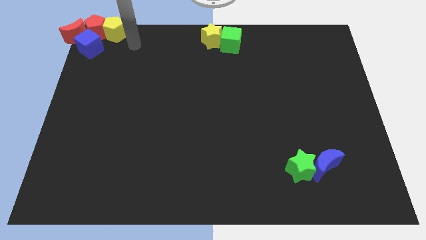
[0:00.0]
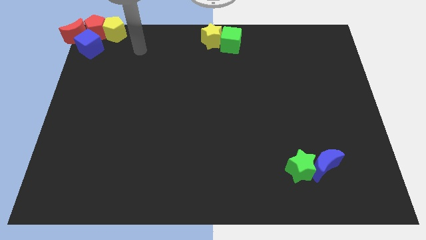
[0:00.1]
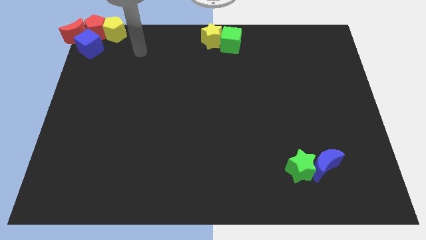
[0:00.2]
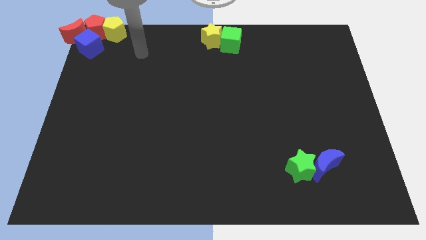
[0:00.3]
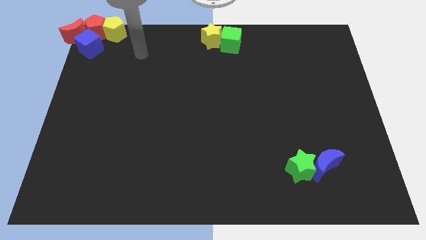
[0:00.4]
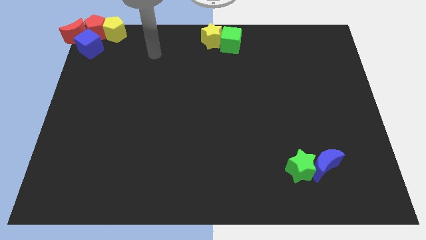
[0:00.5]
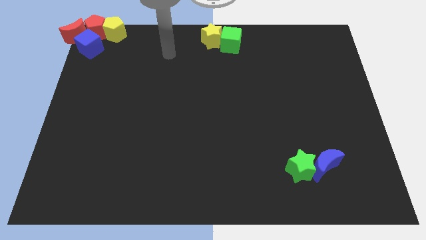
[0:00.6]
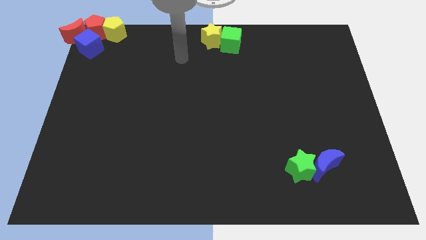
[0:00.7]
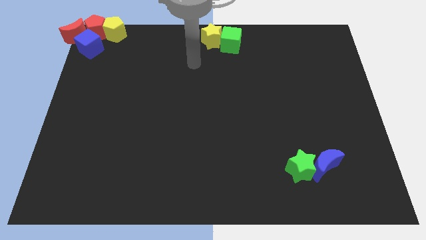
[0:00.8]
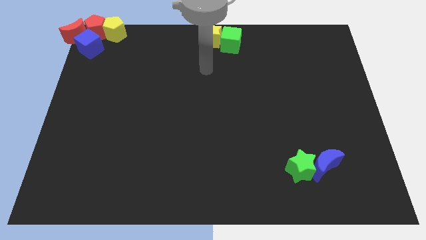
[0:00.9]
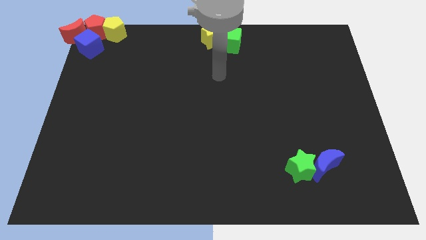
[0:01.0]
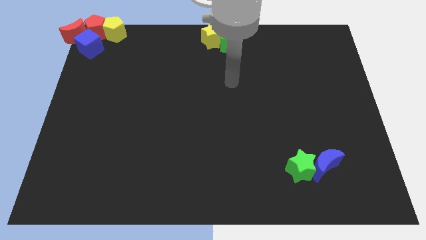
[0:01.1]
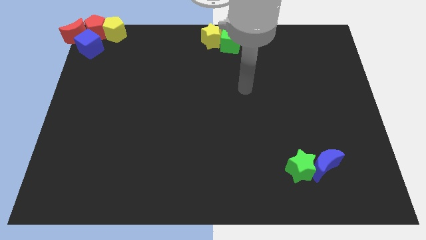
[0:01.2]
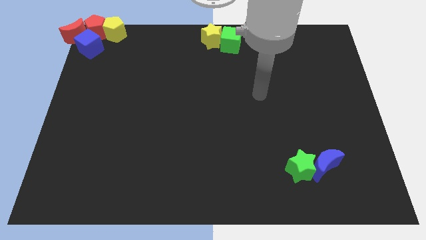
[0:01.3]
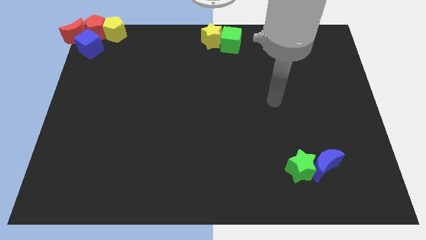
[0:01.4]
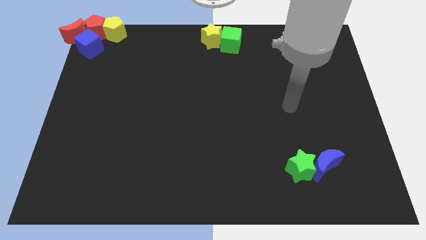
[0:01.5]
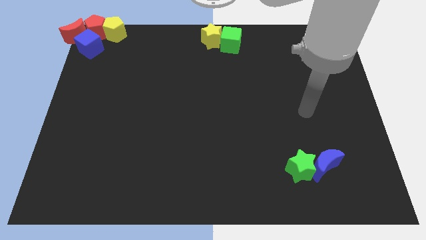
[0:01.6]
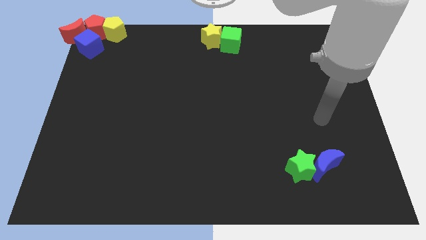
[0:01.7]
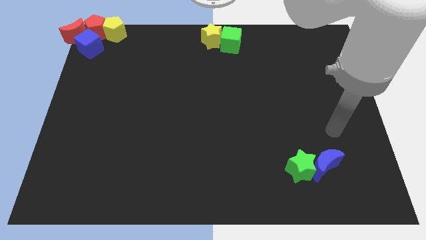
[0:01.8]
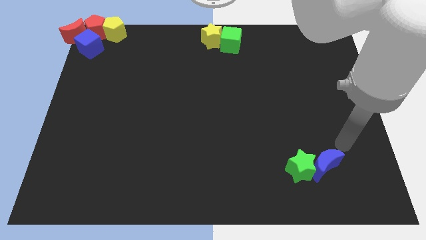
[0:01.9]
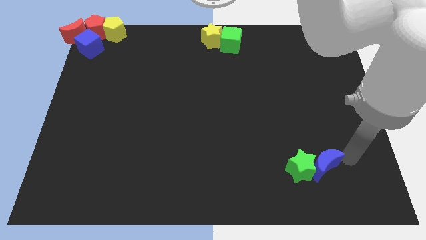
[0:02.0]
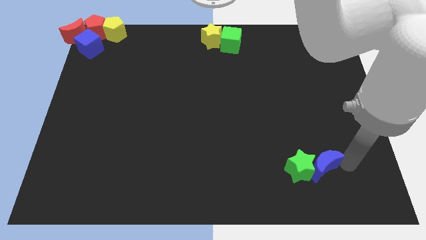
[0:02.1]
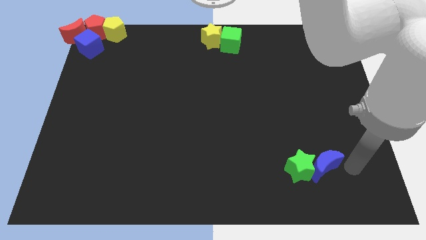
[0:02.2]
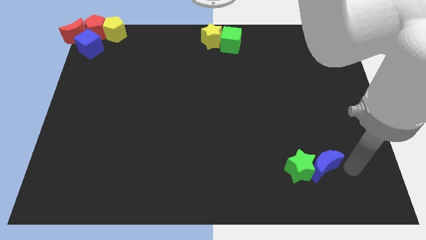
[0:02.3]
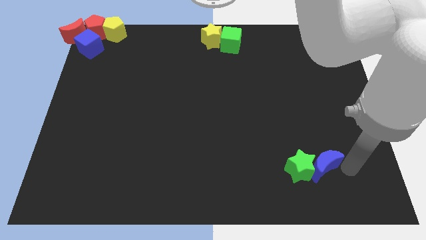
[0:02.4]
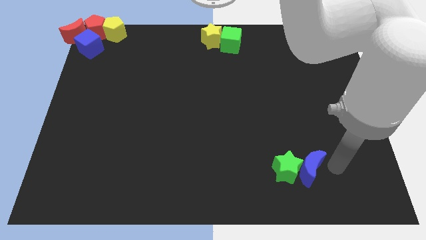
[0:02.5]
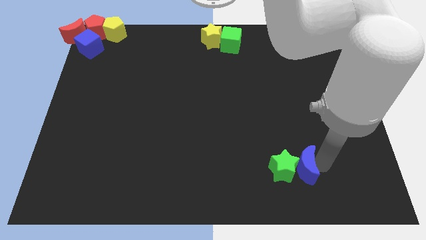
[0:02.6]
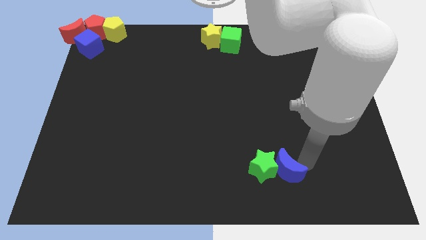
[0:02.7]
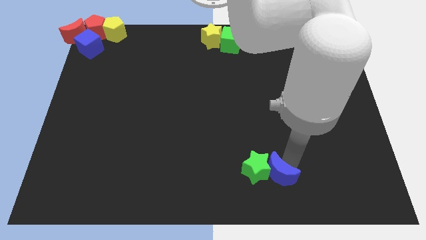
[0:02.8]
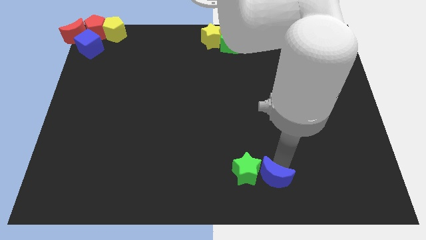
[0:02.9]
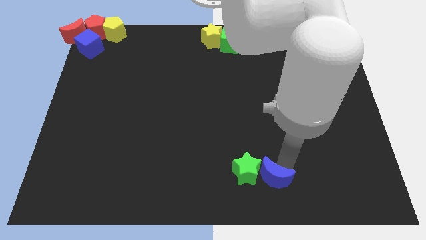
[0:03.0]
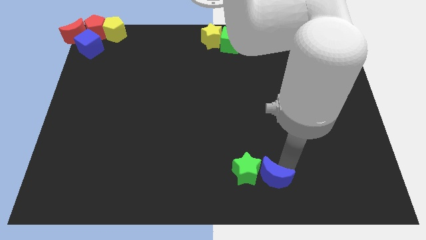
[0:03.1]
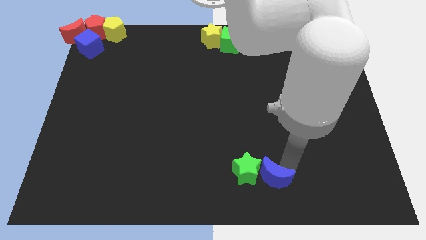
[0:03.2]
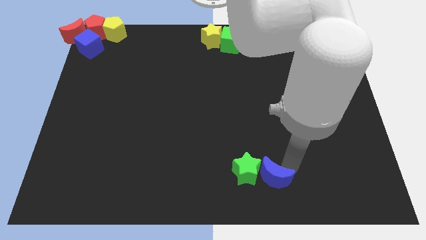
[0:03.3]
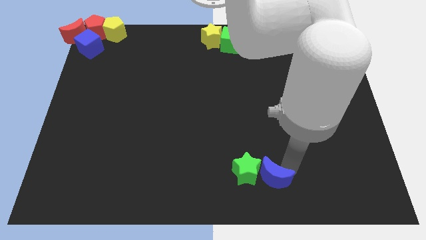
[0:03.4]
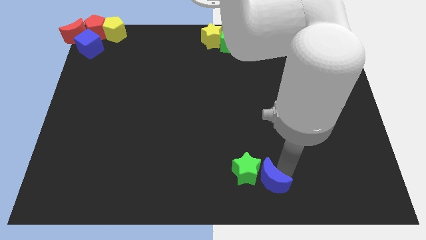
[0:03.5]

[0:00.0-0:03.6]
move the green star and the blue crescent to the left of the board

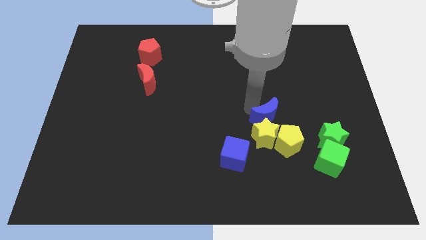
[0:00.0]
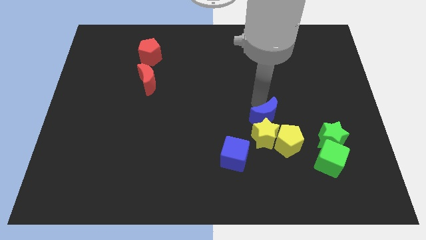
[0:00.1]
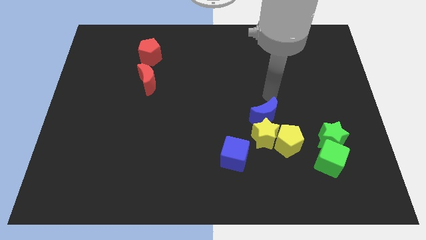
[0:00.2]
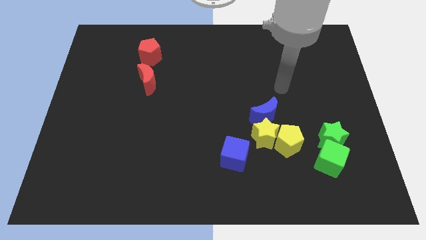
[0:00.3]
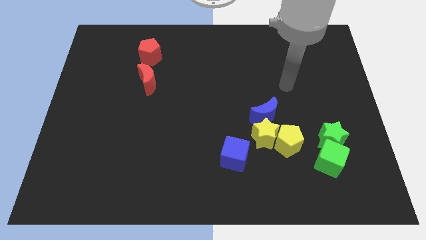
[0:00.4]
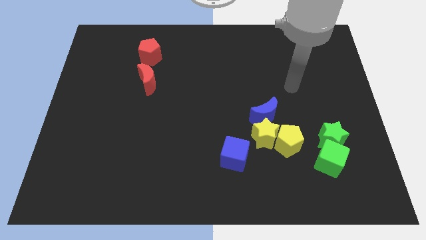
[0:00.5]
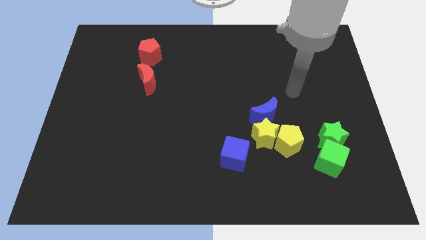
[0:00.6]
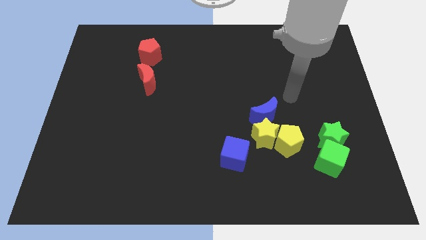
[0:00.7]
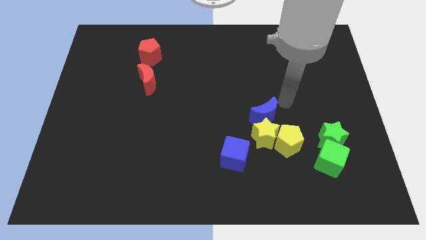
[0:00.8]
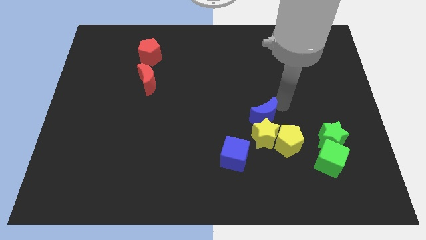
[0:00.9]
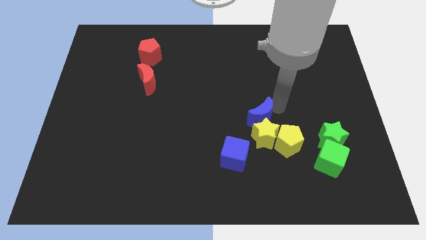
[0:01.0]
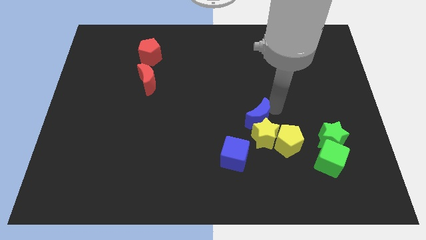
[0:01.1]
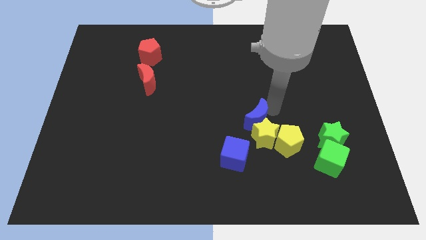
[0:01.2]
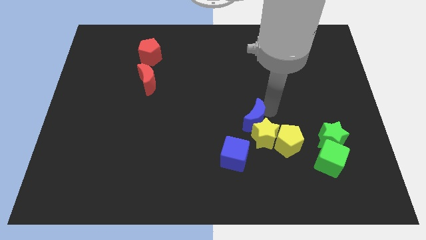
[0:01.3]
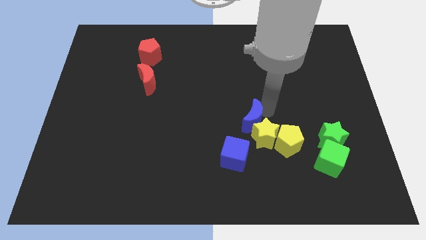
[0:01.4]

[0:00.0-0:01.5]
move the blue crescent to the group of blocks

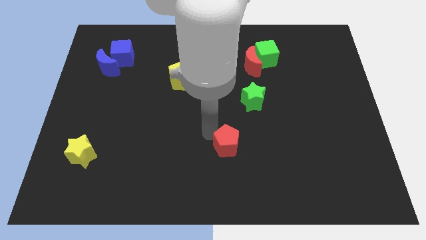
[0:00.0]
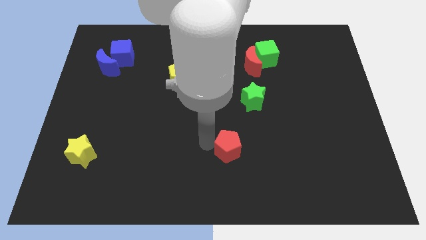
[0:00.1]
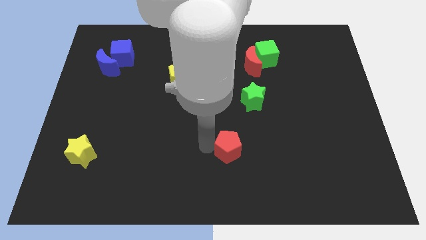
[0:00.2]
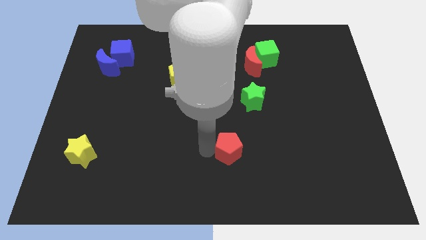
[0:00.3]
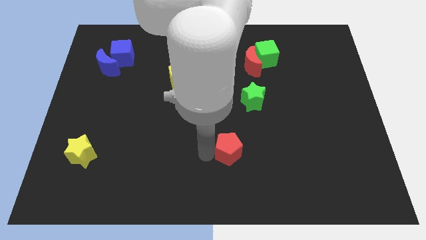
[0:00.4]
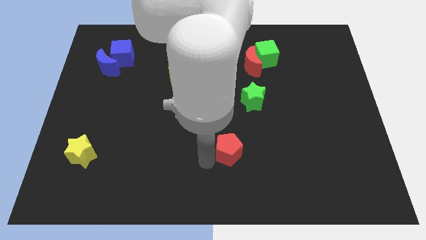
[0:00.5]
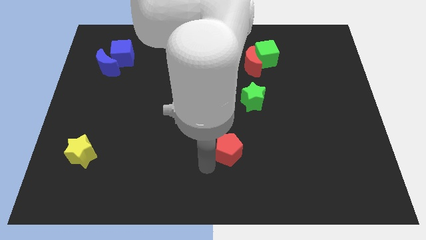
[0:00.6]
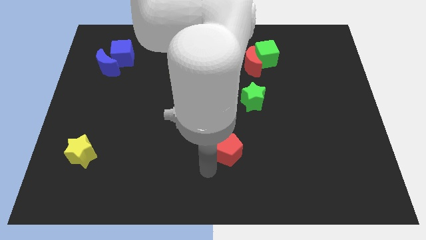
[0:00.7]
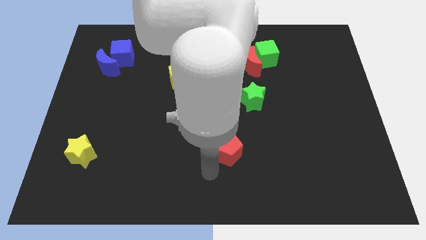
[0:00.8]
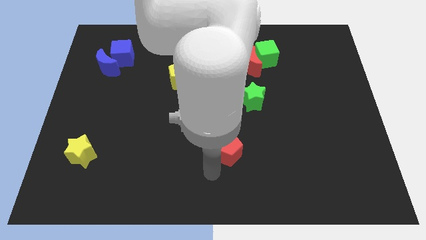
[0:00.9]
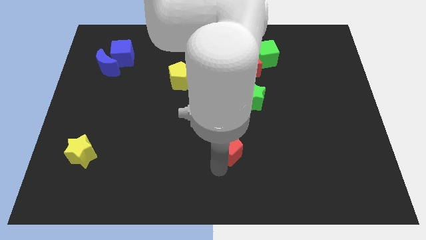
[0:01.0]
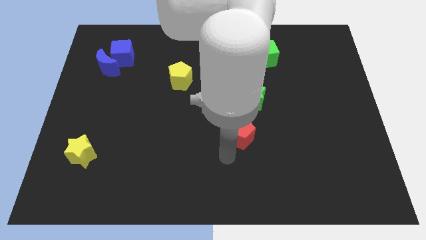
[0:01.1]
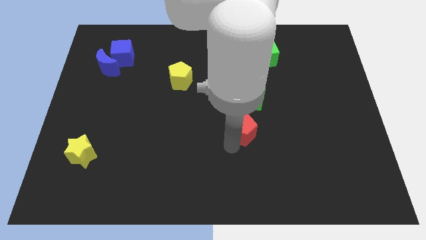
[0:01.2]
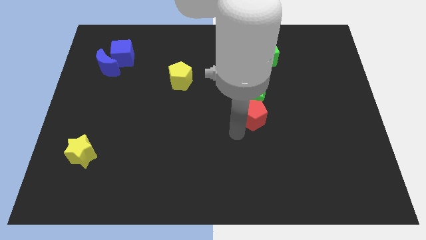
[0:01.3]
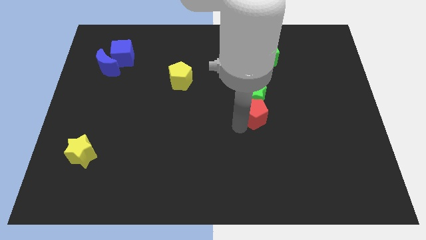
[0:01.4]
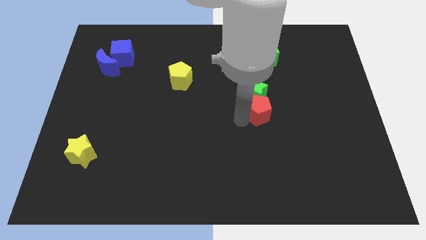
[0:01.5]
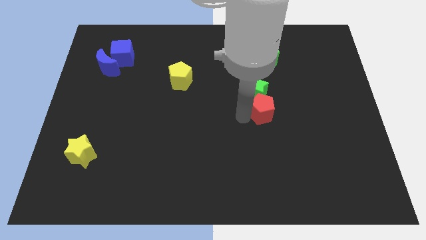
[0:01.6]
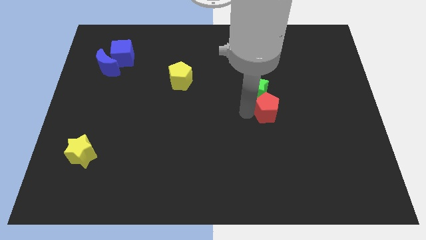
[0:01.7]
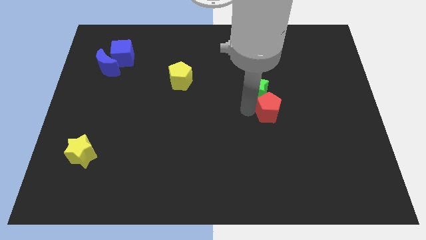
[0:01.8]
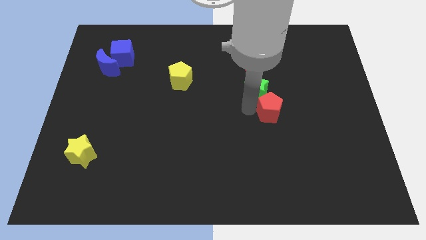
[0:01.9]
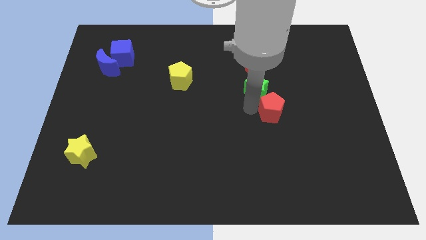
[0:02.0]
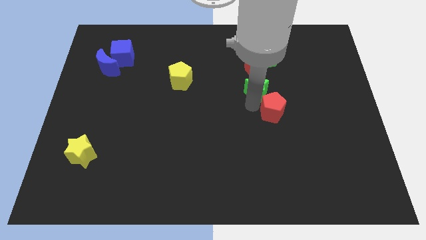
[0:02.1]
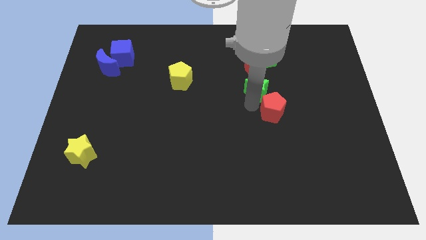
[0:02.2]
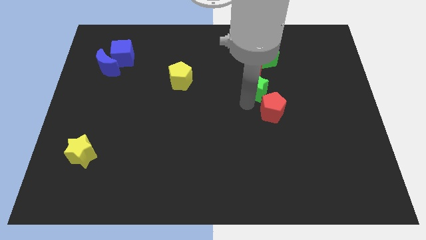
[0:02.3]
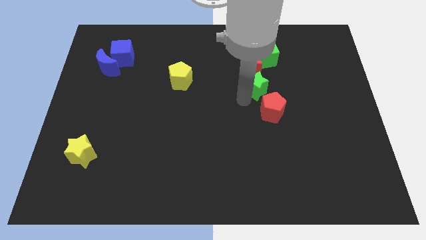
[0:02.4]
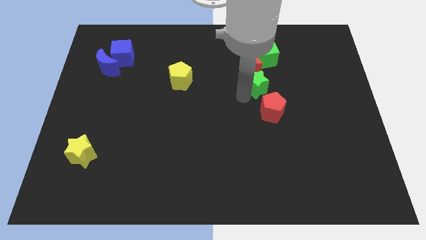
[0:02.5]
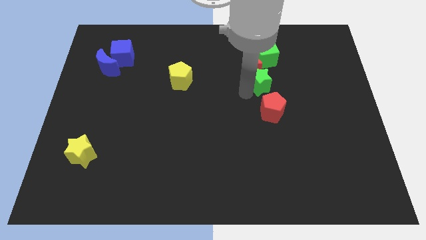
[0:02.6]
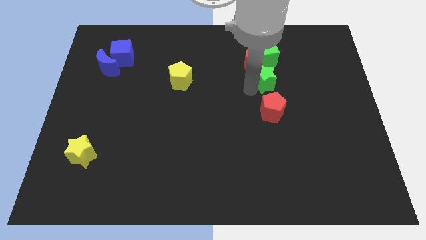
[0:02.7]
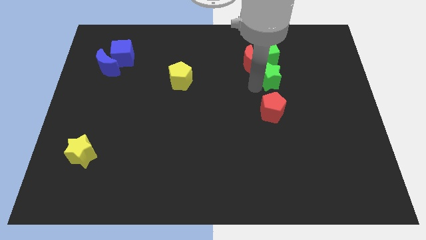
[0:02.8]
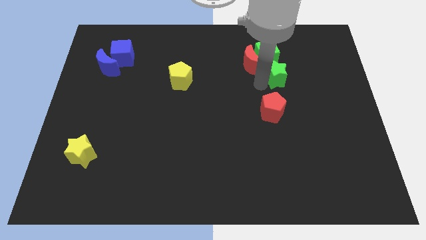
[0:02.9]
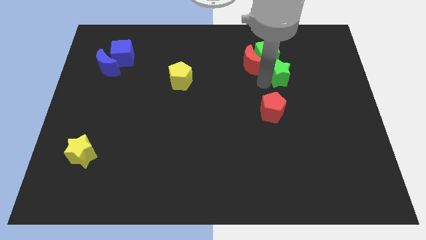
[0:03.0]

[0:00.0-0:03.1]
move red pentagon towards the green star

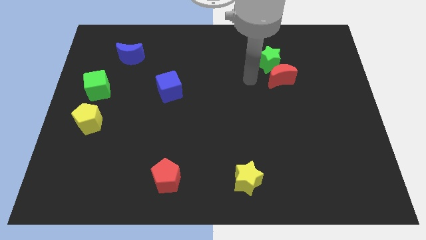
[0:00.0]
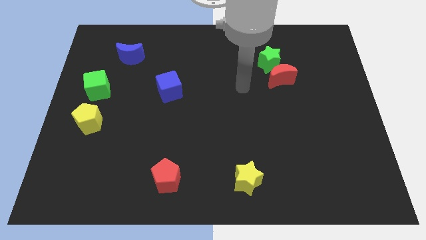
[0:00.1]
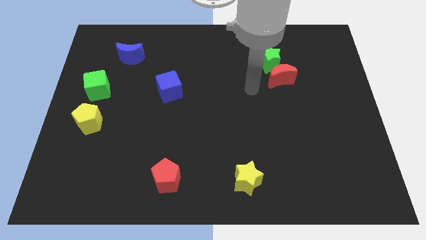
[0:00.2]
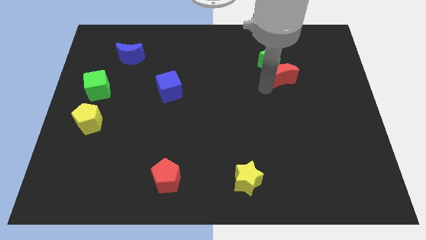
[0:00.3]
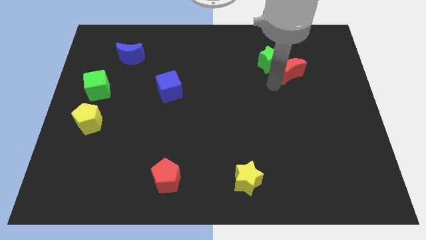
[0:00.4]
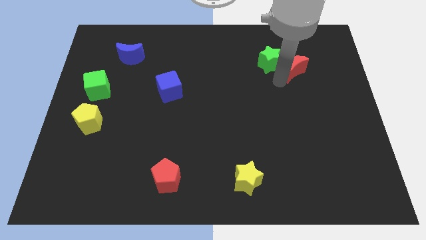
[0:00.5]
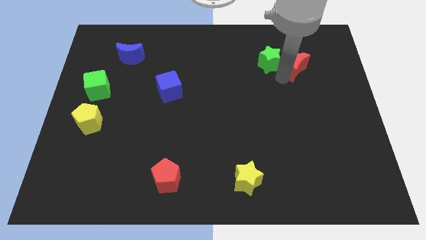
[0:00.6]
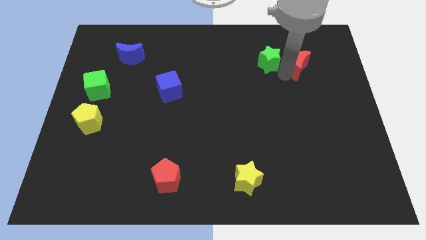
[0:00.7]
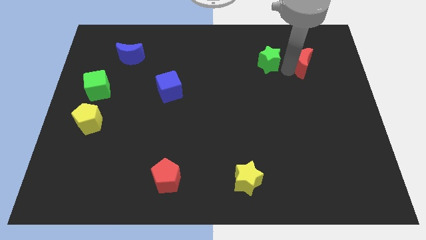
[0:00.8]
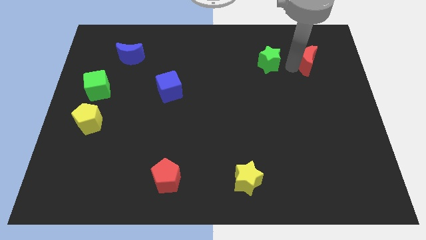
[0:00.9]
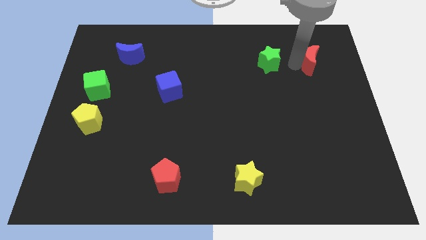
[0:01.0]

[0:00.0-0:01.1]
move red moon to the right of green star
